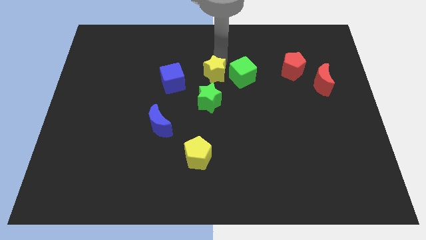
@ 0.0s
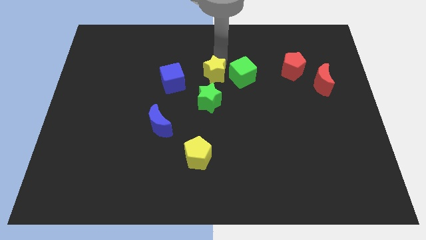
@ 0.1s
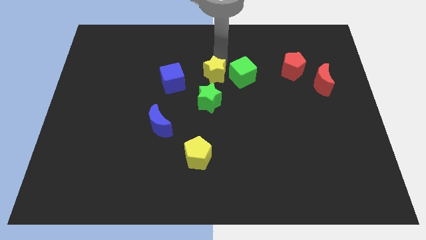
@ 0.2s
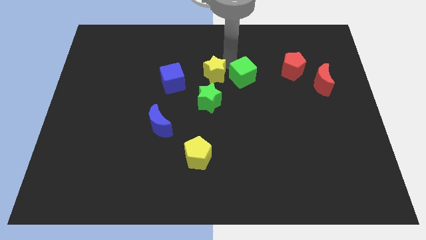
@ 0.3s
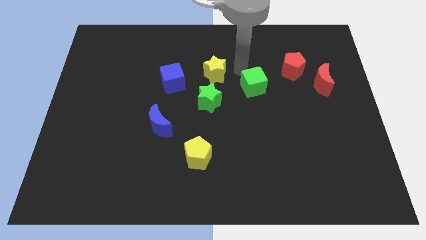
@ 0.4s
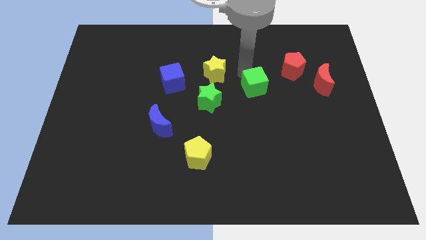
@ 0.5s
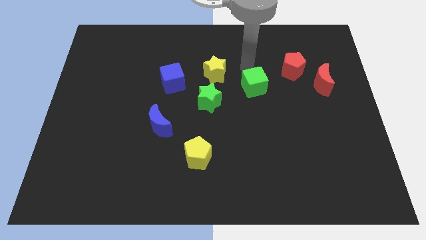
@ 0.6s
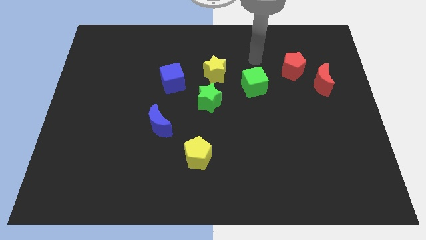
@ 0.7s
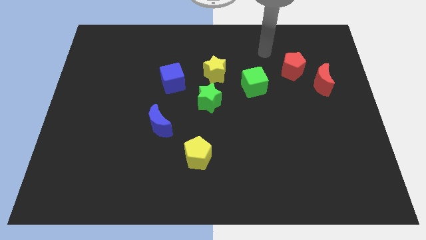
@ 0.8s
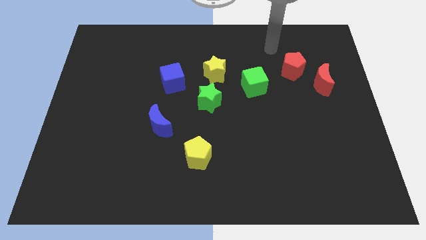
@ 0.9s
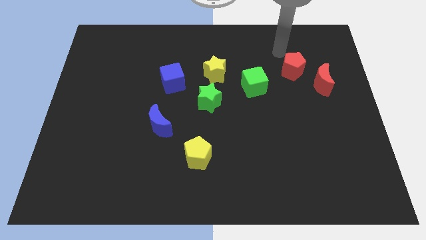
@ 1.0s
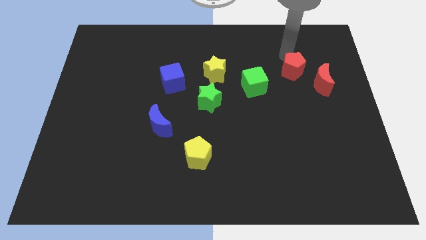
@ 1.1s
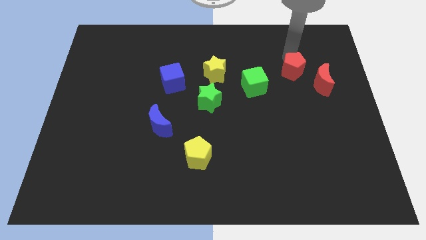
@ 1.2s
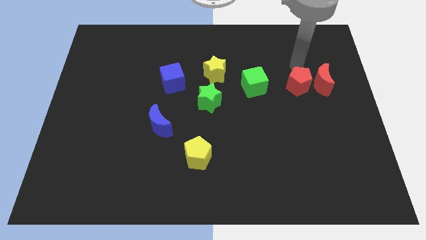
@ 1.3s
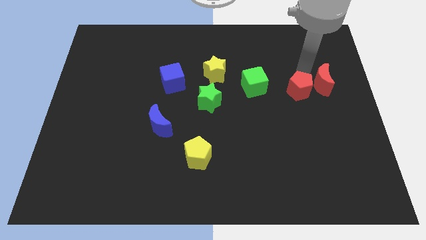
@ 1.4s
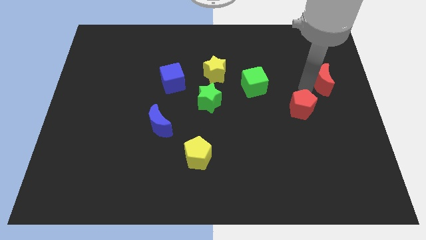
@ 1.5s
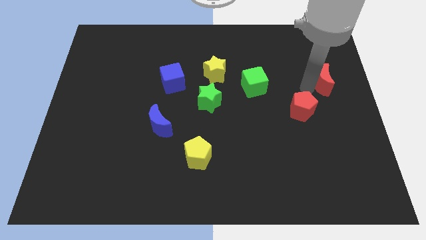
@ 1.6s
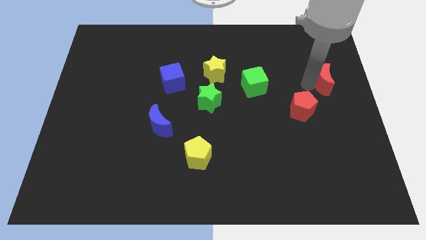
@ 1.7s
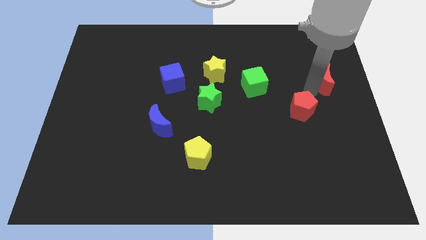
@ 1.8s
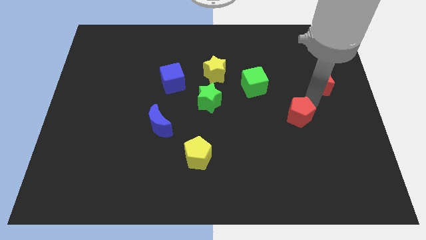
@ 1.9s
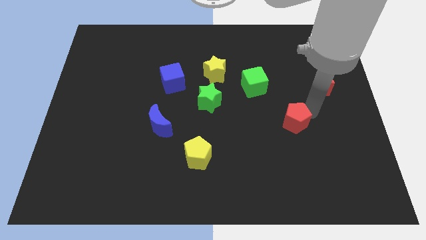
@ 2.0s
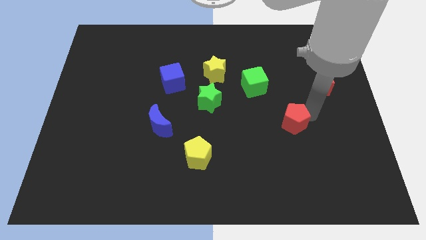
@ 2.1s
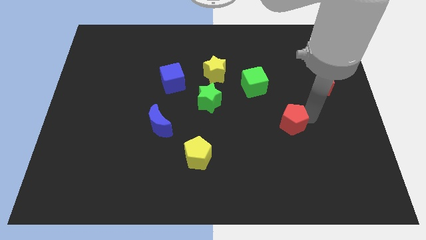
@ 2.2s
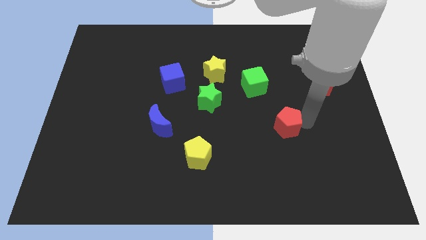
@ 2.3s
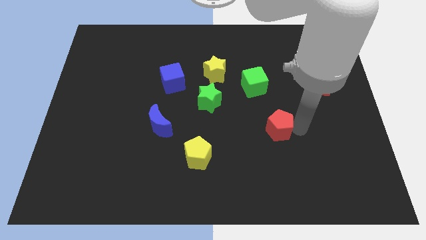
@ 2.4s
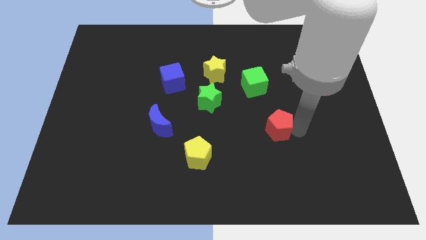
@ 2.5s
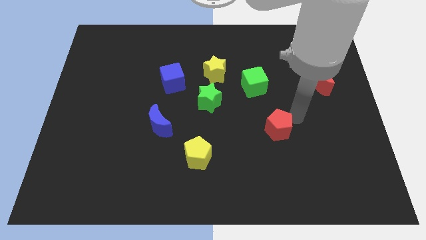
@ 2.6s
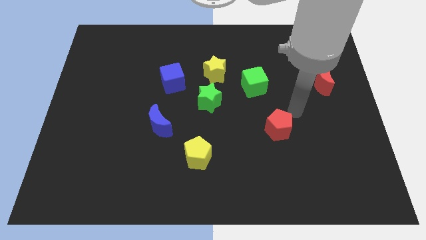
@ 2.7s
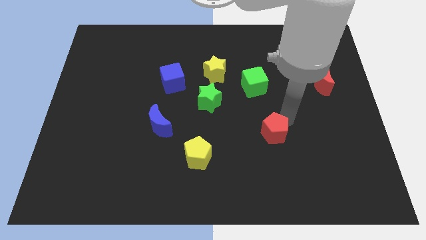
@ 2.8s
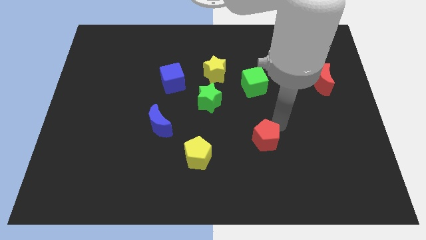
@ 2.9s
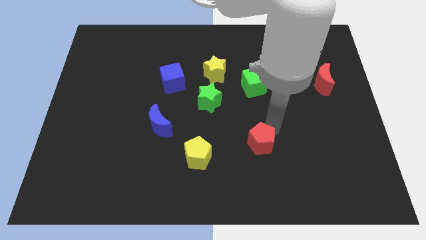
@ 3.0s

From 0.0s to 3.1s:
push the red pentagon vertically below the green cube

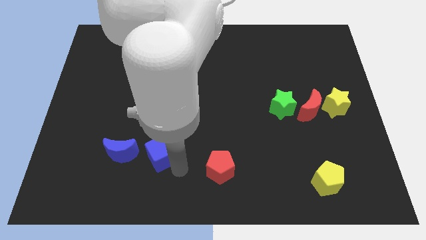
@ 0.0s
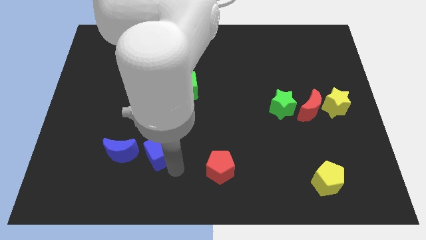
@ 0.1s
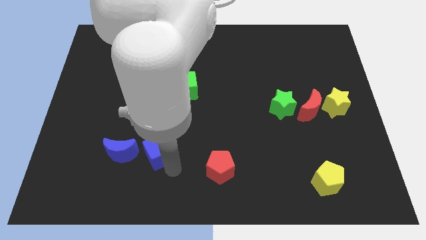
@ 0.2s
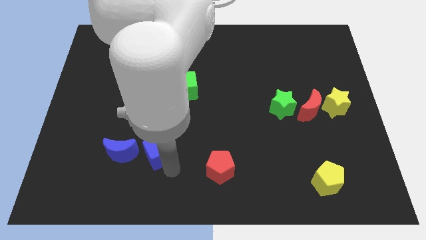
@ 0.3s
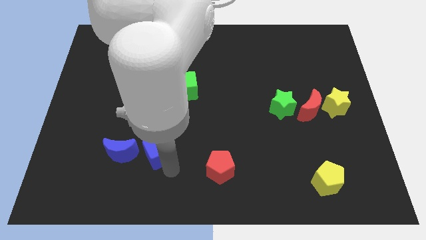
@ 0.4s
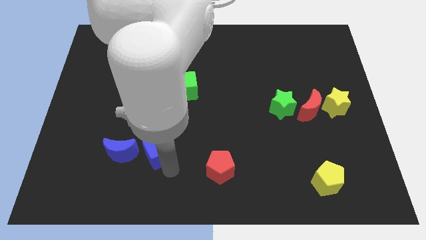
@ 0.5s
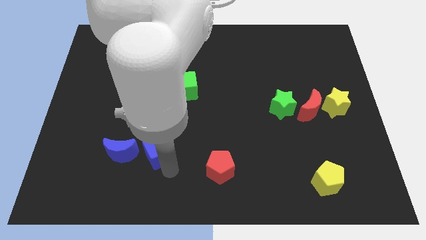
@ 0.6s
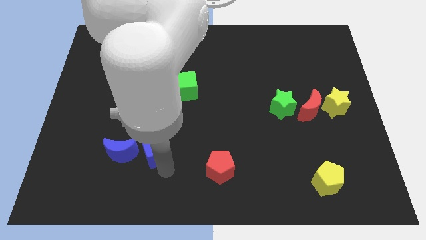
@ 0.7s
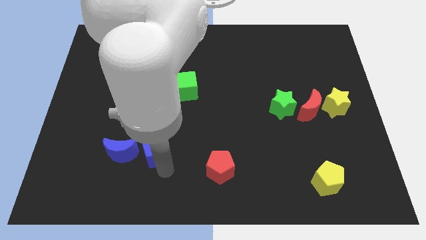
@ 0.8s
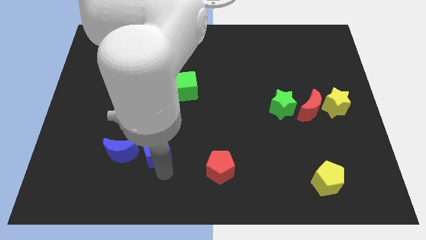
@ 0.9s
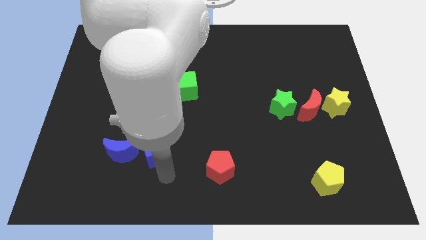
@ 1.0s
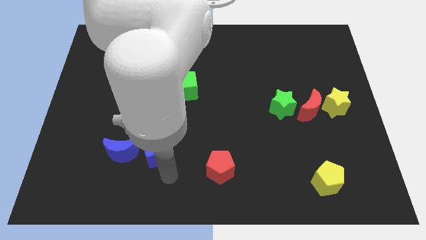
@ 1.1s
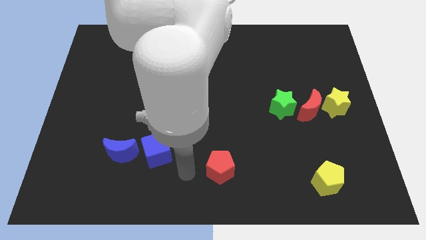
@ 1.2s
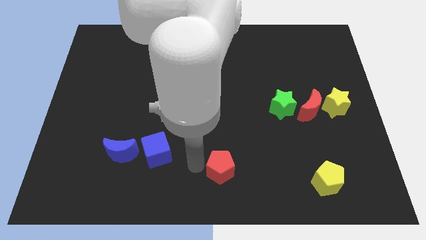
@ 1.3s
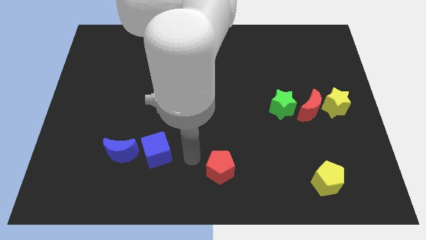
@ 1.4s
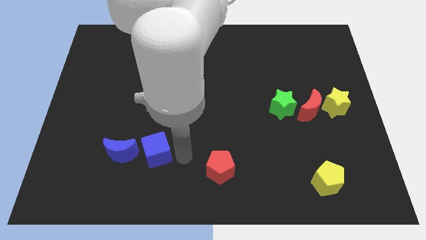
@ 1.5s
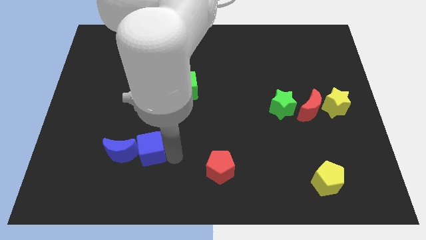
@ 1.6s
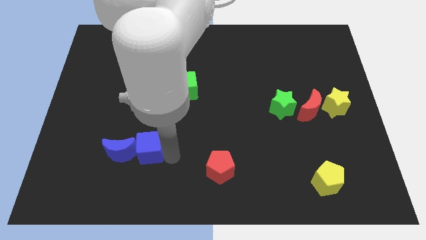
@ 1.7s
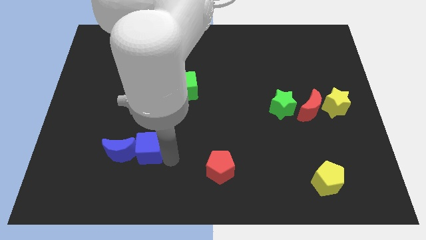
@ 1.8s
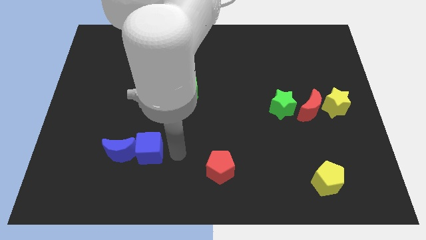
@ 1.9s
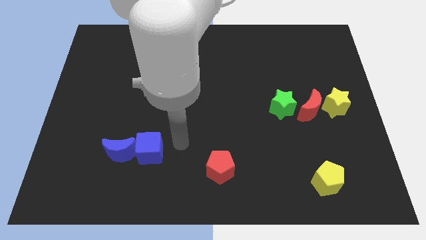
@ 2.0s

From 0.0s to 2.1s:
move the blue cube into the blue crescent

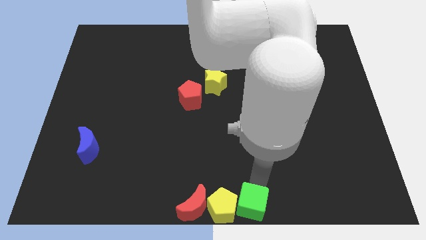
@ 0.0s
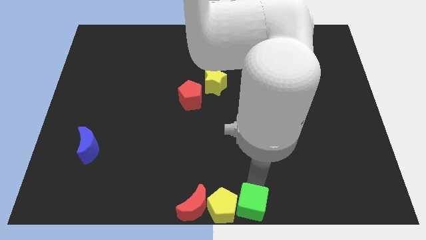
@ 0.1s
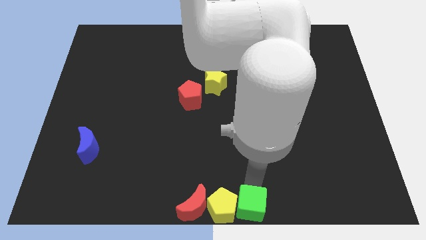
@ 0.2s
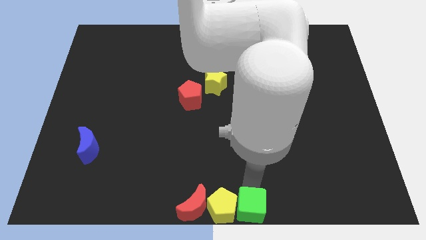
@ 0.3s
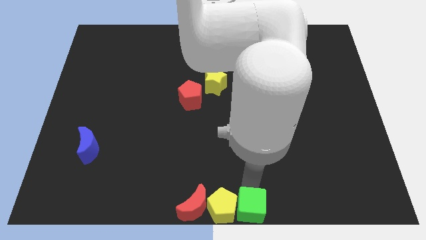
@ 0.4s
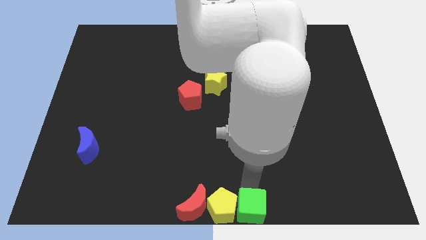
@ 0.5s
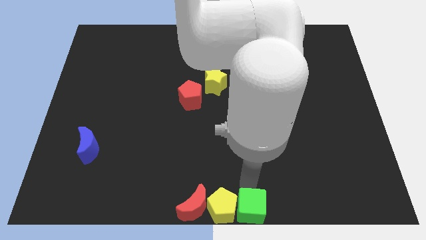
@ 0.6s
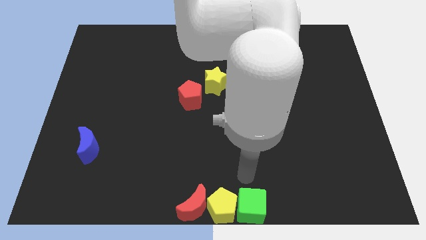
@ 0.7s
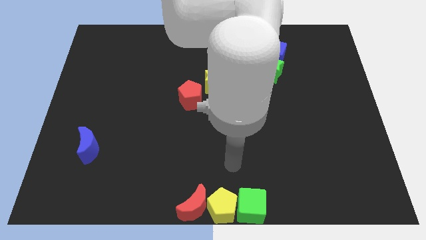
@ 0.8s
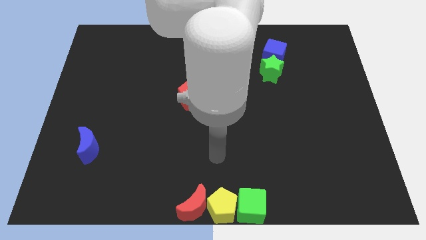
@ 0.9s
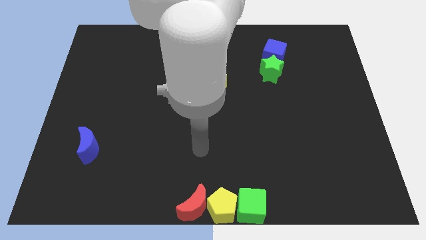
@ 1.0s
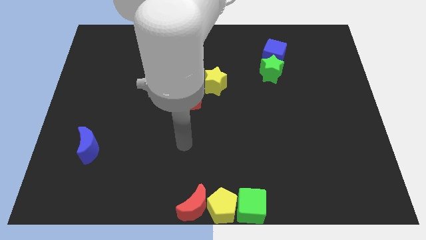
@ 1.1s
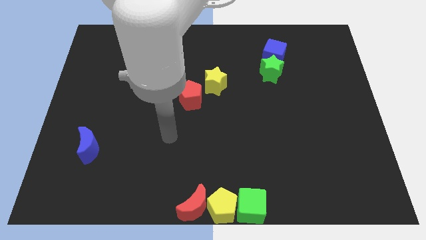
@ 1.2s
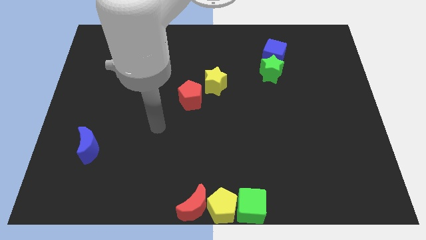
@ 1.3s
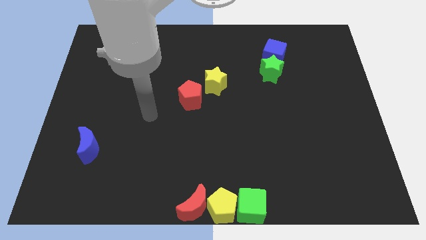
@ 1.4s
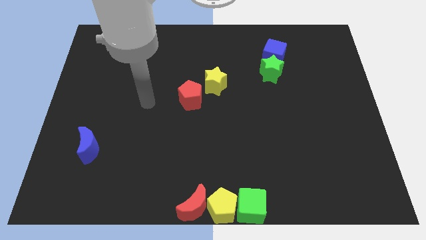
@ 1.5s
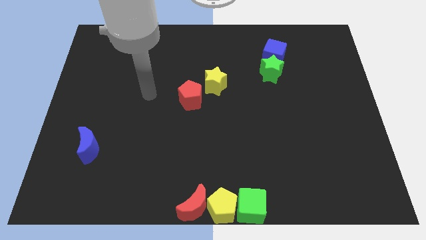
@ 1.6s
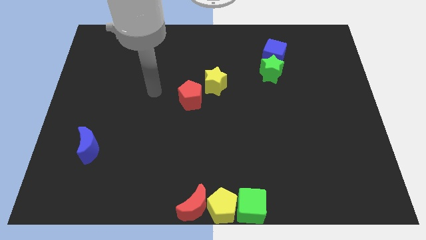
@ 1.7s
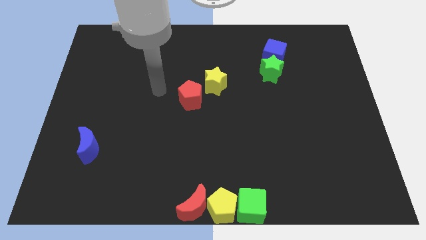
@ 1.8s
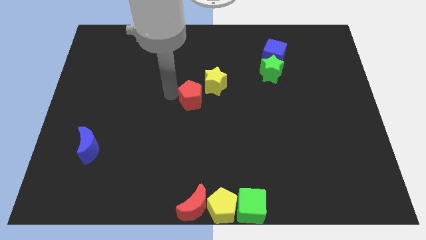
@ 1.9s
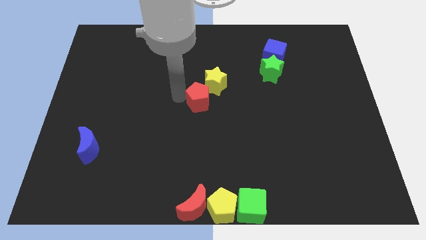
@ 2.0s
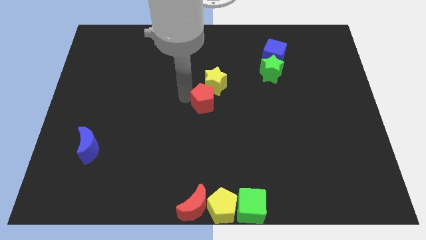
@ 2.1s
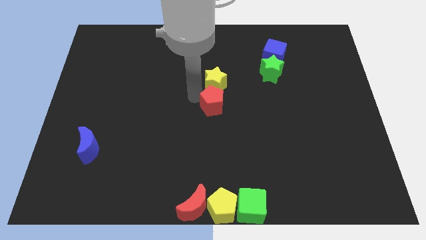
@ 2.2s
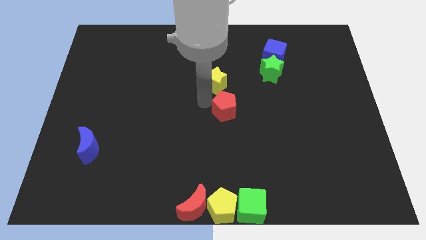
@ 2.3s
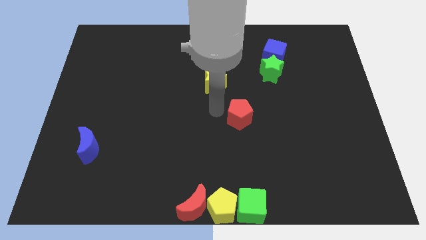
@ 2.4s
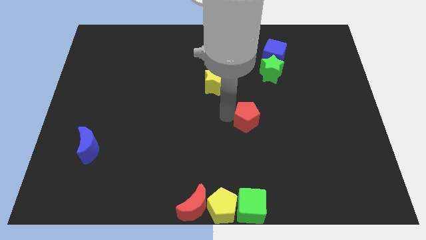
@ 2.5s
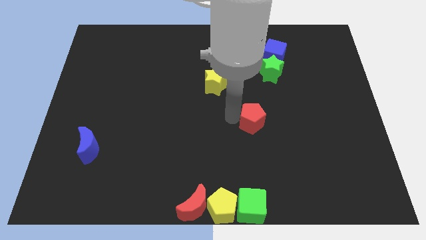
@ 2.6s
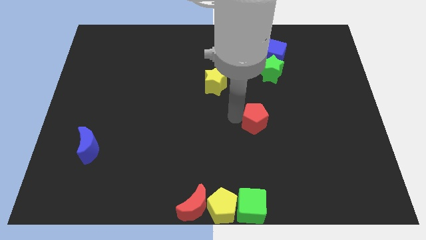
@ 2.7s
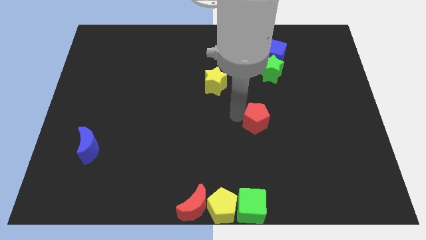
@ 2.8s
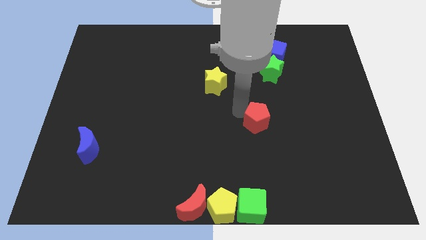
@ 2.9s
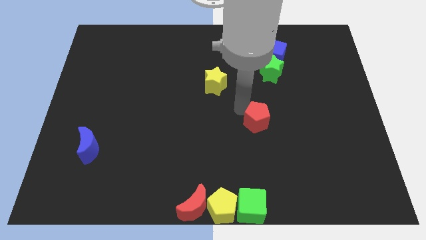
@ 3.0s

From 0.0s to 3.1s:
place red pentagon parallel above green cube

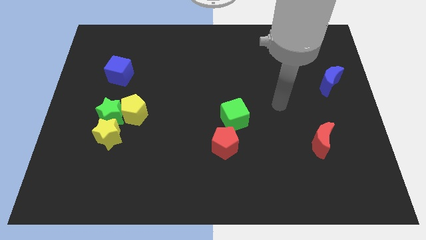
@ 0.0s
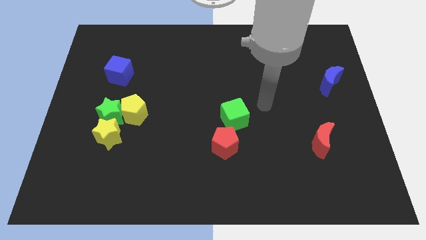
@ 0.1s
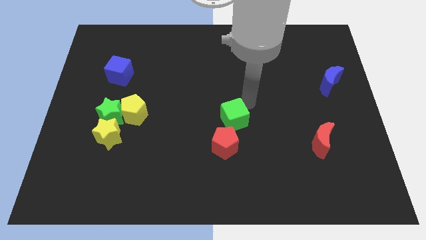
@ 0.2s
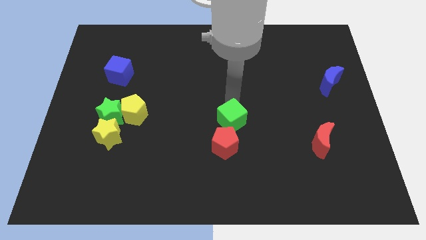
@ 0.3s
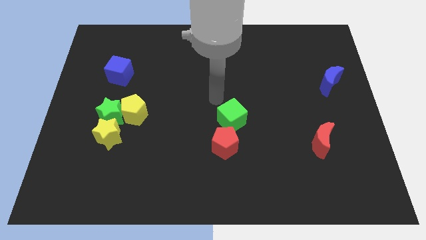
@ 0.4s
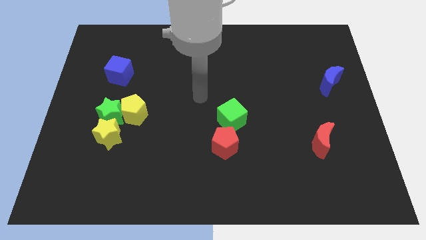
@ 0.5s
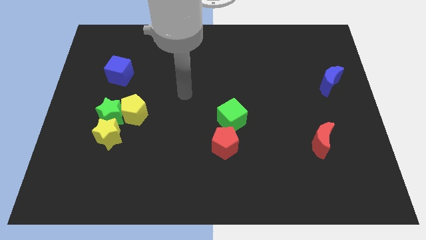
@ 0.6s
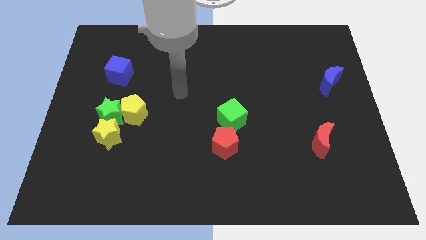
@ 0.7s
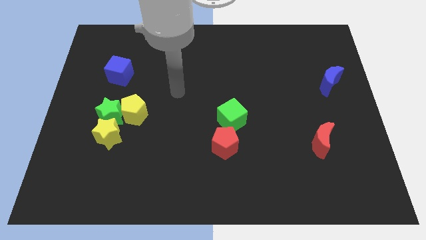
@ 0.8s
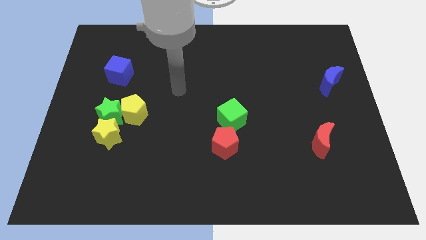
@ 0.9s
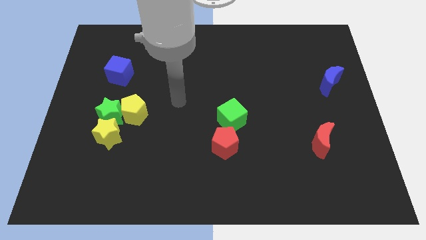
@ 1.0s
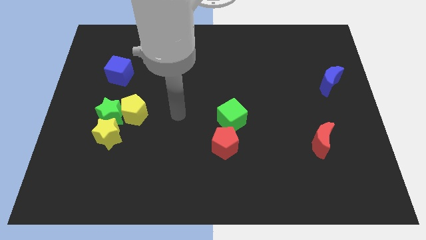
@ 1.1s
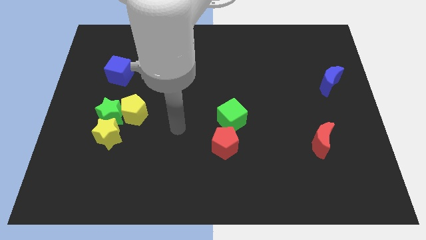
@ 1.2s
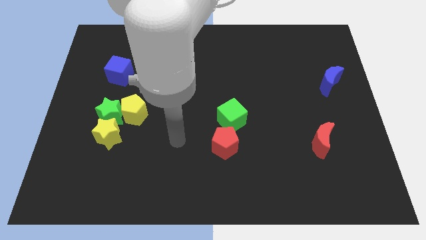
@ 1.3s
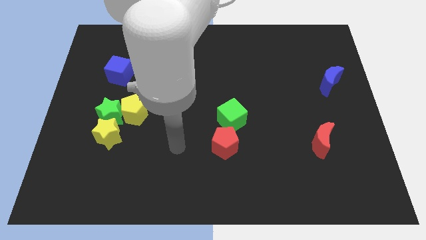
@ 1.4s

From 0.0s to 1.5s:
place your arm to the left of the red pentagon
